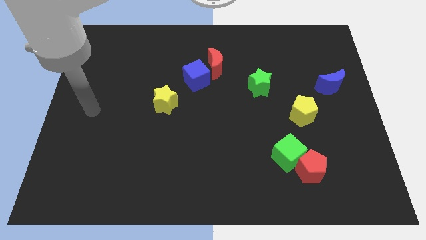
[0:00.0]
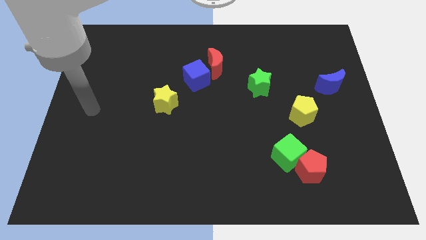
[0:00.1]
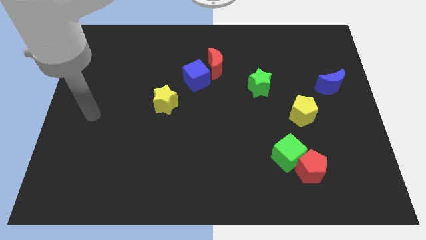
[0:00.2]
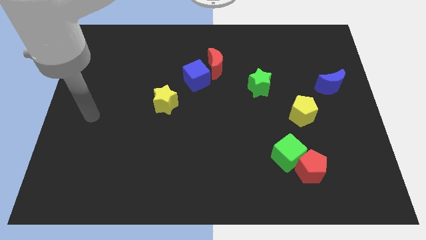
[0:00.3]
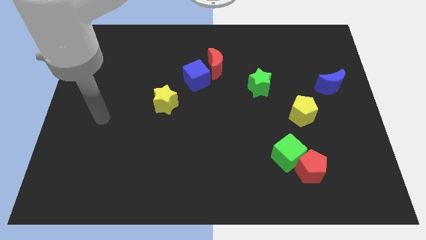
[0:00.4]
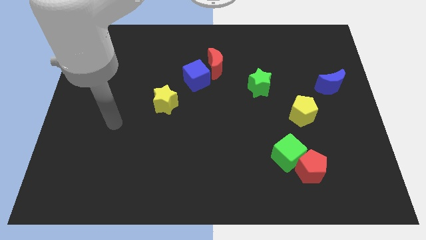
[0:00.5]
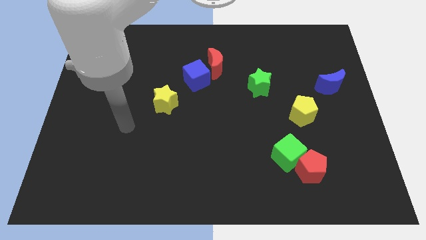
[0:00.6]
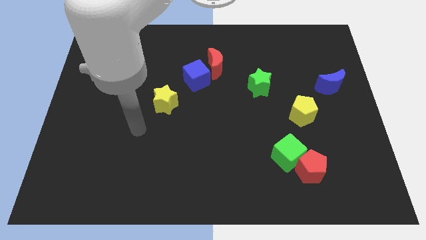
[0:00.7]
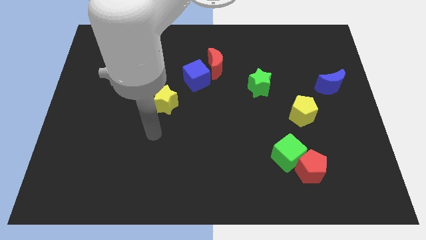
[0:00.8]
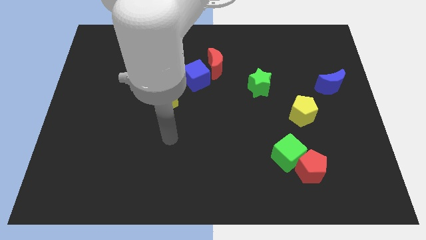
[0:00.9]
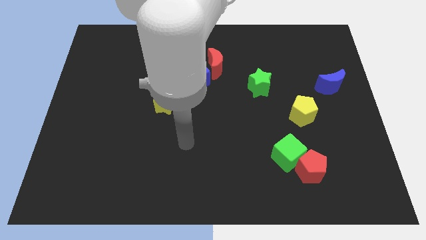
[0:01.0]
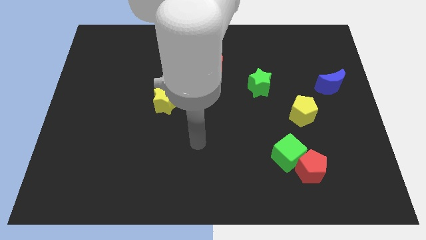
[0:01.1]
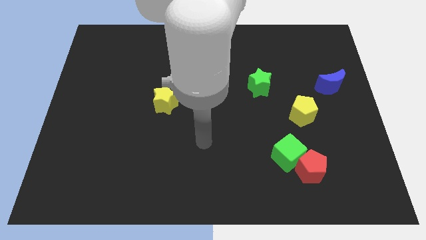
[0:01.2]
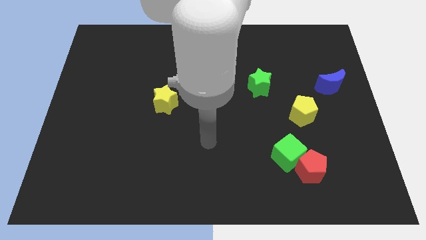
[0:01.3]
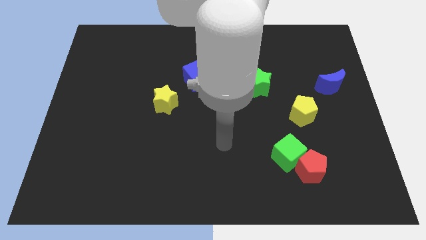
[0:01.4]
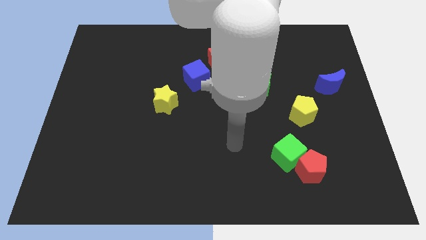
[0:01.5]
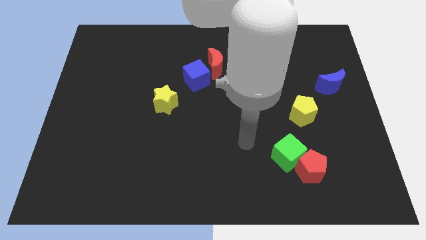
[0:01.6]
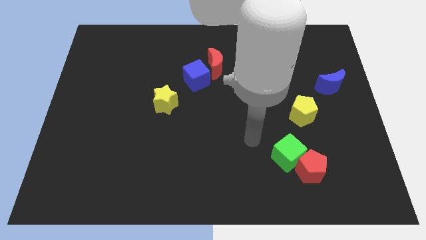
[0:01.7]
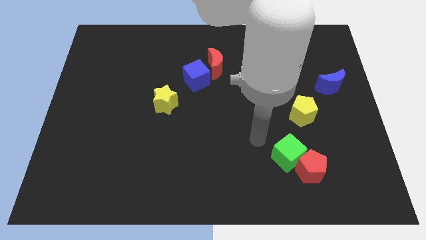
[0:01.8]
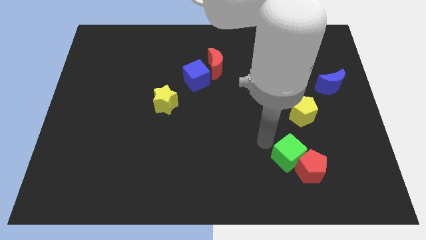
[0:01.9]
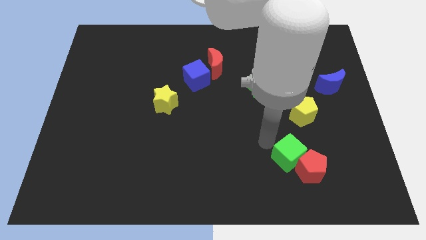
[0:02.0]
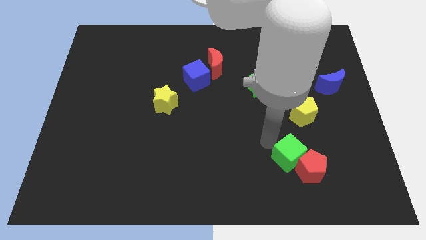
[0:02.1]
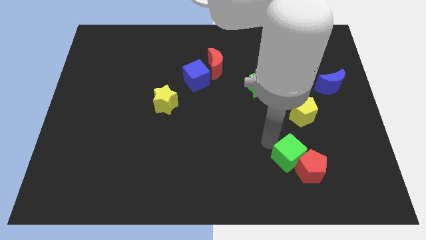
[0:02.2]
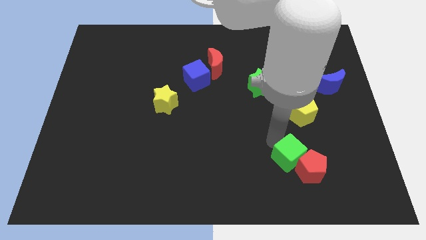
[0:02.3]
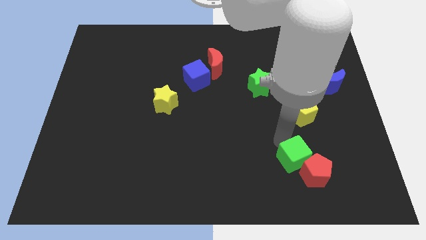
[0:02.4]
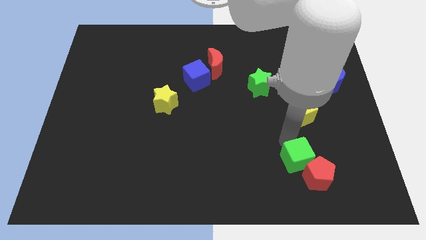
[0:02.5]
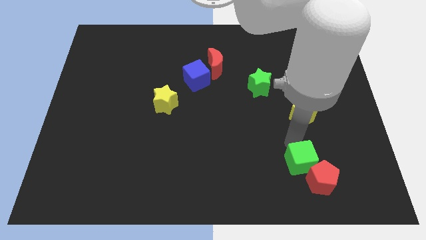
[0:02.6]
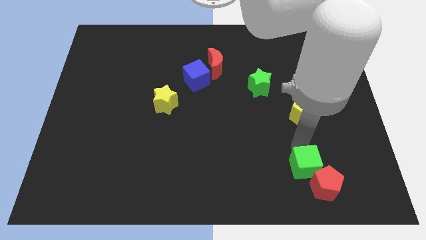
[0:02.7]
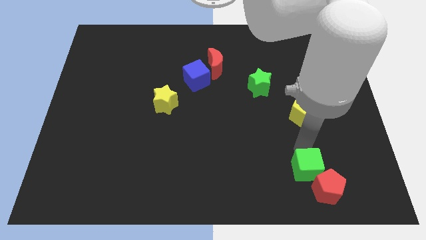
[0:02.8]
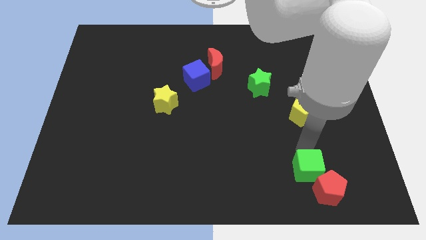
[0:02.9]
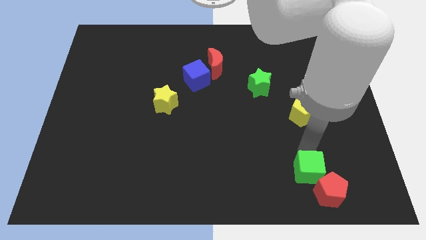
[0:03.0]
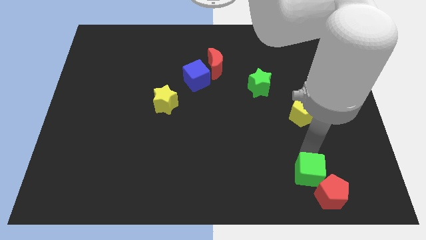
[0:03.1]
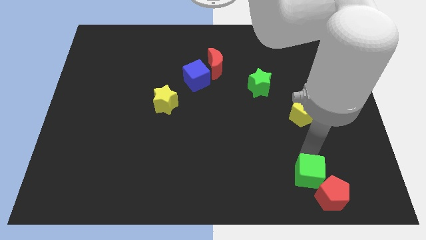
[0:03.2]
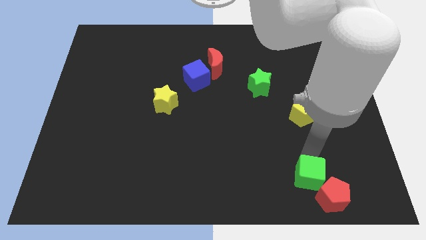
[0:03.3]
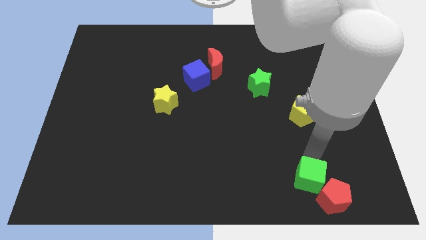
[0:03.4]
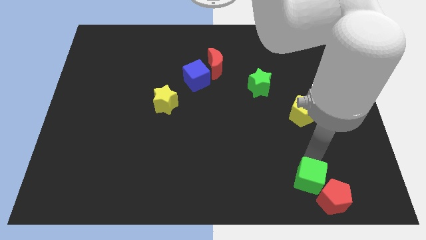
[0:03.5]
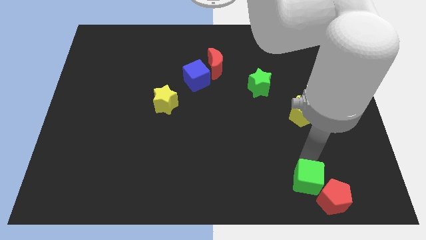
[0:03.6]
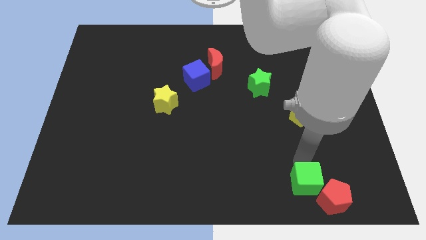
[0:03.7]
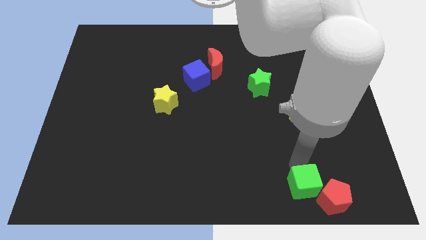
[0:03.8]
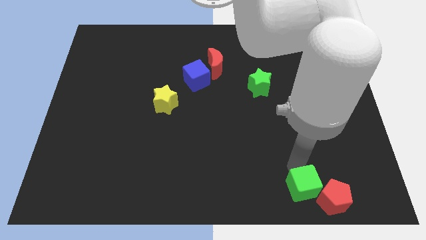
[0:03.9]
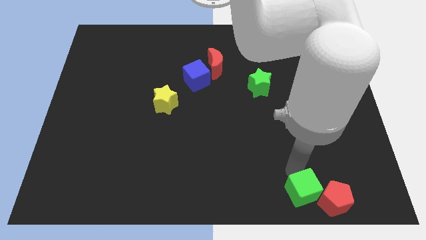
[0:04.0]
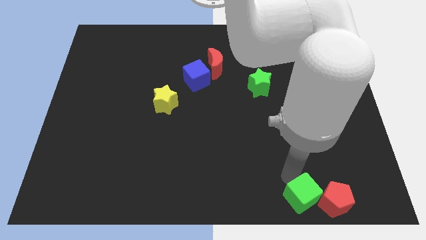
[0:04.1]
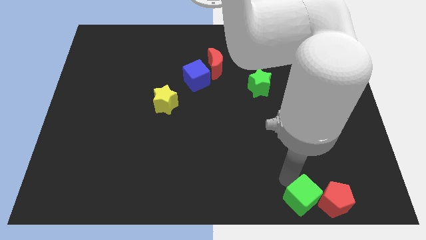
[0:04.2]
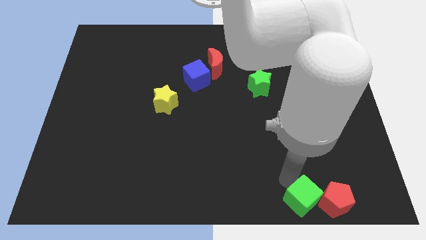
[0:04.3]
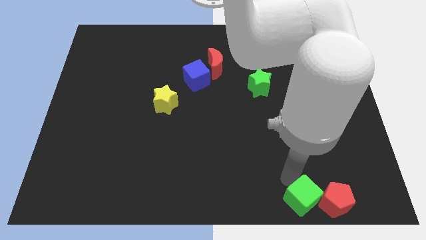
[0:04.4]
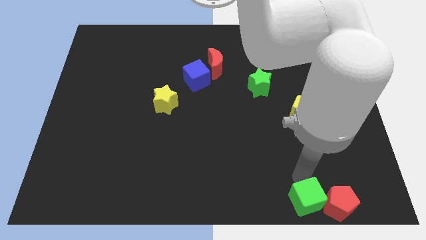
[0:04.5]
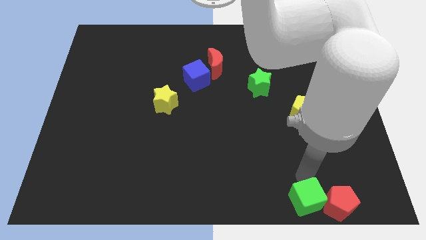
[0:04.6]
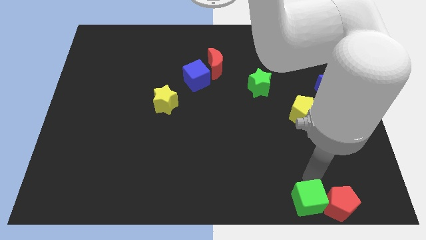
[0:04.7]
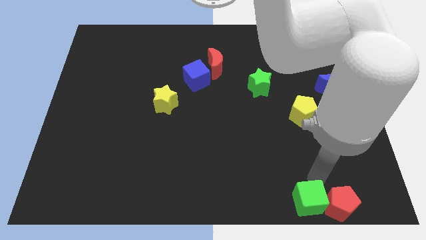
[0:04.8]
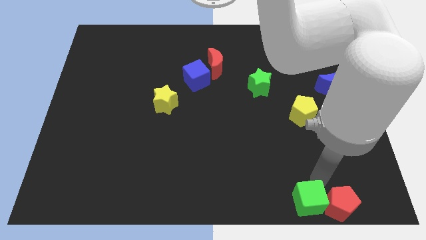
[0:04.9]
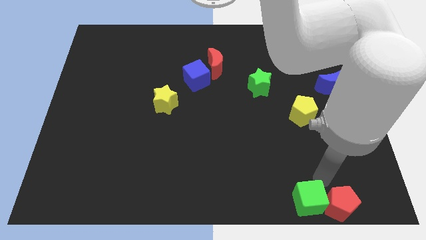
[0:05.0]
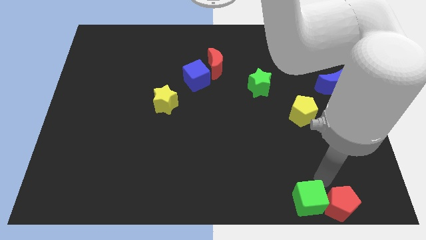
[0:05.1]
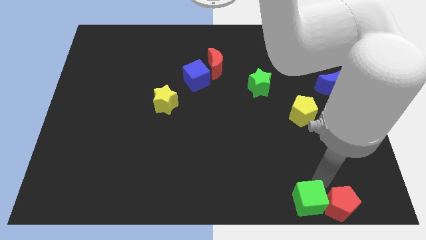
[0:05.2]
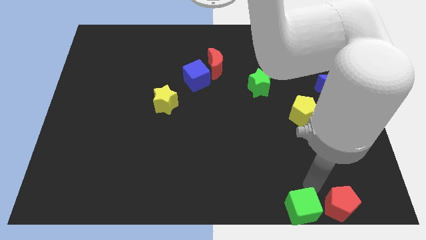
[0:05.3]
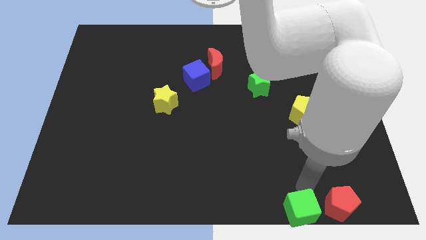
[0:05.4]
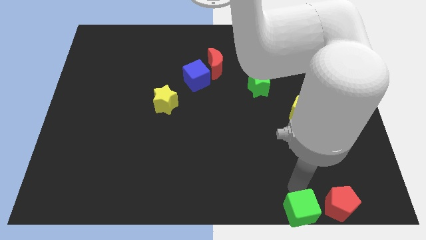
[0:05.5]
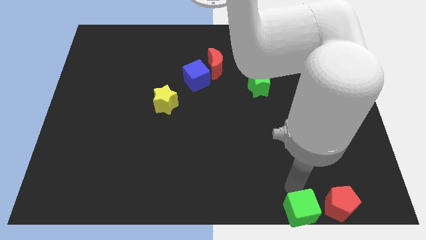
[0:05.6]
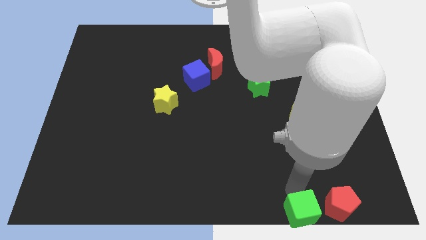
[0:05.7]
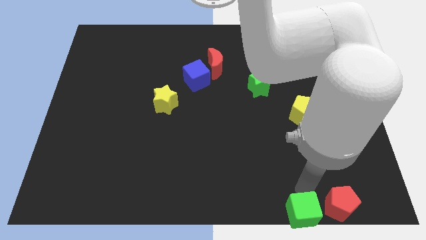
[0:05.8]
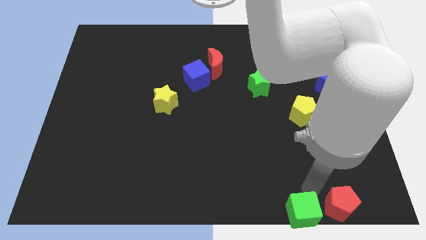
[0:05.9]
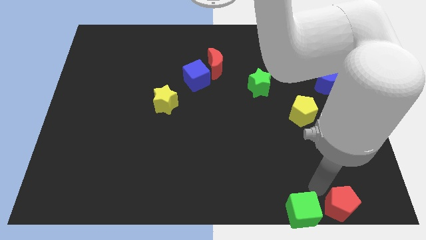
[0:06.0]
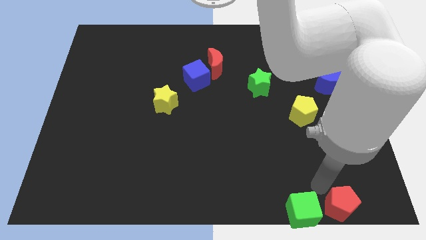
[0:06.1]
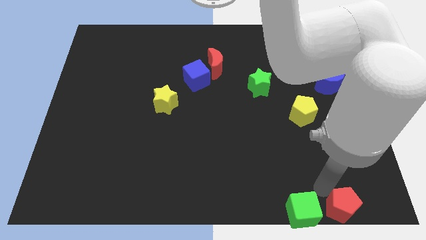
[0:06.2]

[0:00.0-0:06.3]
place the green cube left to the red pentagon

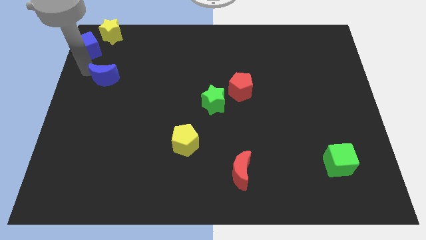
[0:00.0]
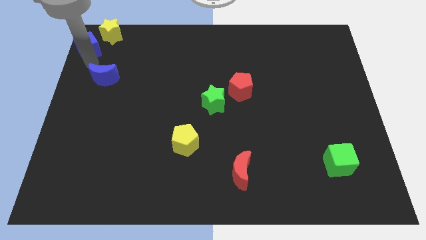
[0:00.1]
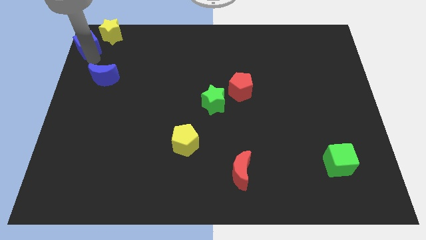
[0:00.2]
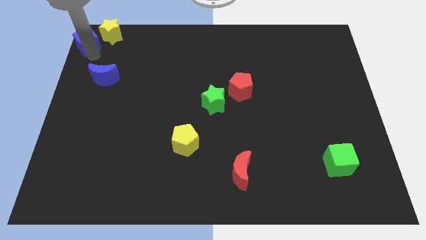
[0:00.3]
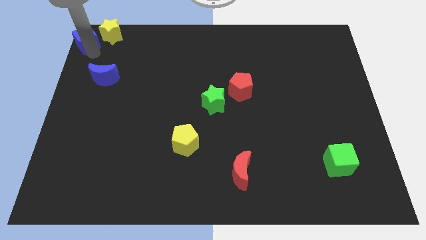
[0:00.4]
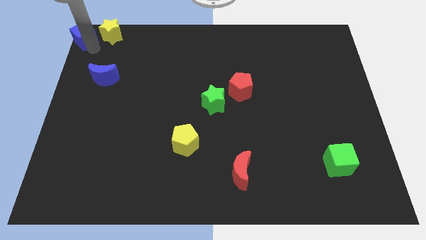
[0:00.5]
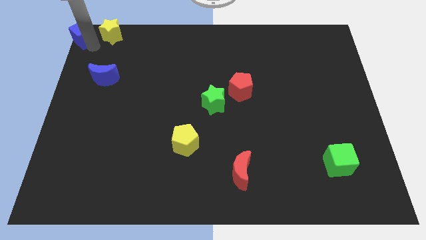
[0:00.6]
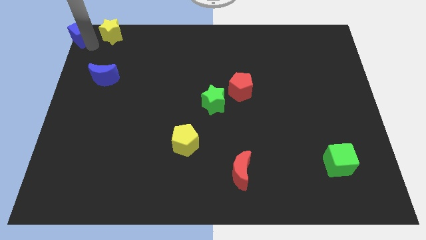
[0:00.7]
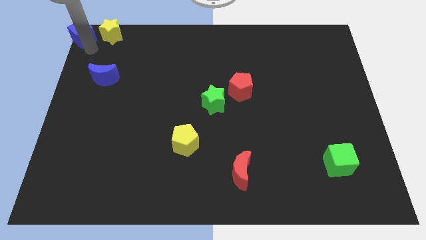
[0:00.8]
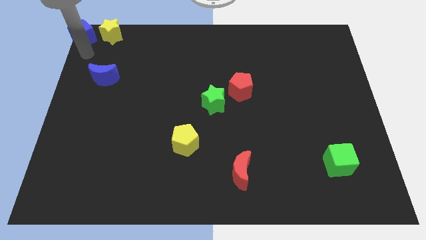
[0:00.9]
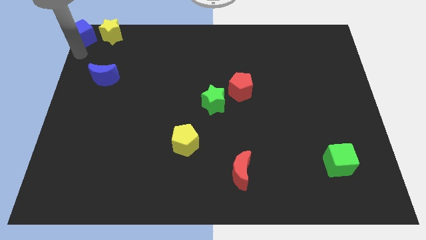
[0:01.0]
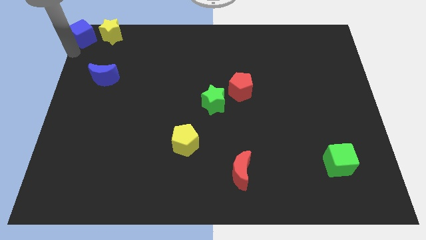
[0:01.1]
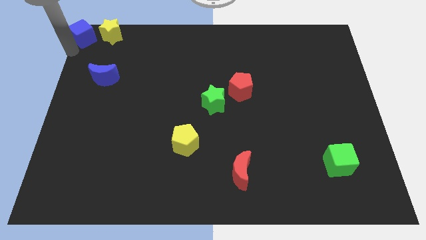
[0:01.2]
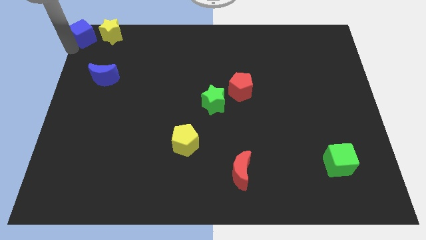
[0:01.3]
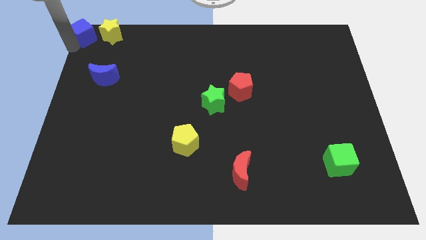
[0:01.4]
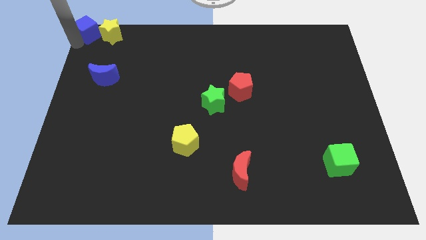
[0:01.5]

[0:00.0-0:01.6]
move the blue cube to the left side of the yellow star

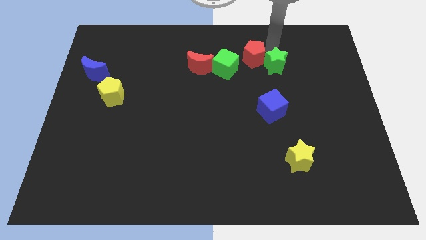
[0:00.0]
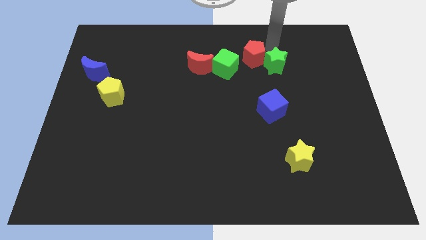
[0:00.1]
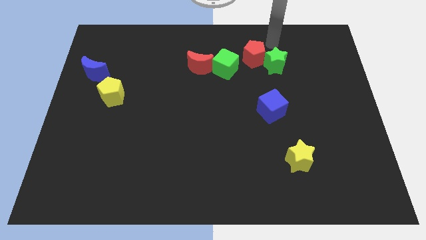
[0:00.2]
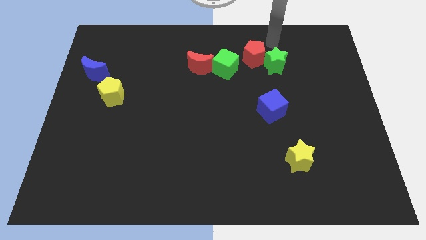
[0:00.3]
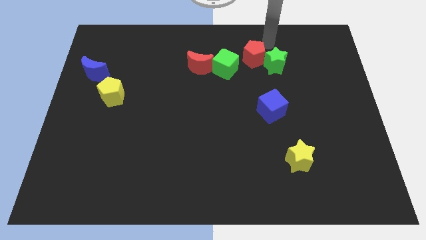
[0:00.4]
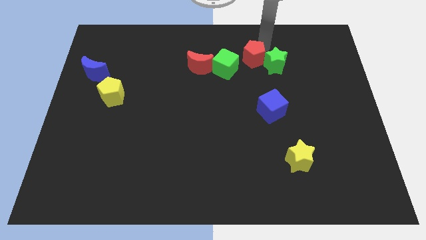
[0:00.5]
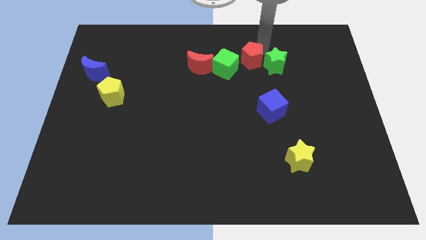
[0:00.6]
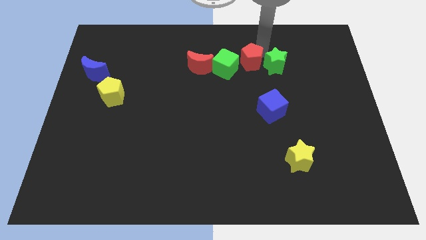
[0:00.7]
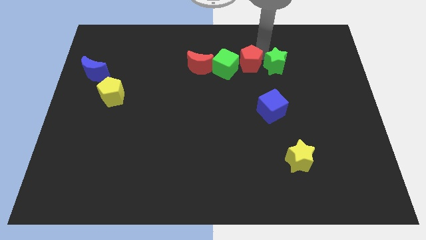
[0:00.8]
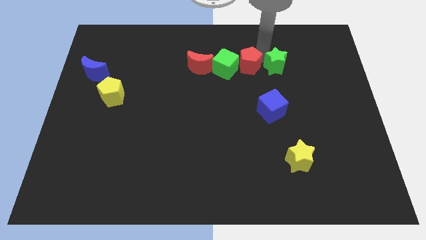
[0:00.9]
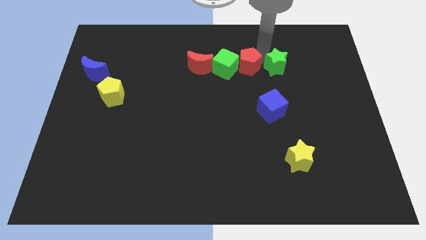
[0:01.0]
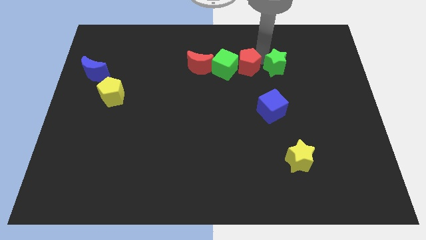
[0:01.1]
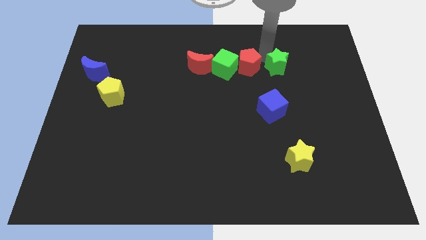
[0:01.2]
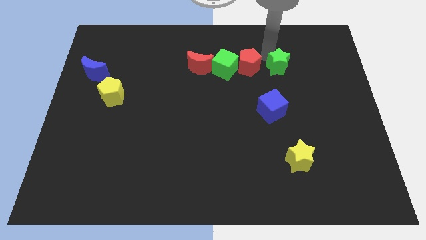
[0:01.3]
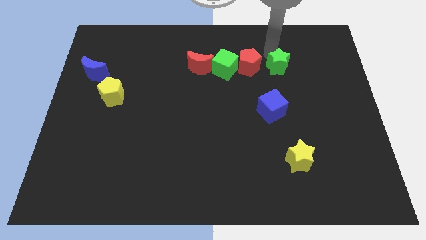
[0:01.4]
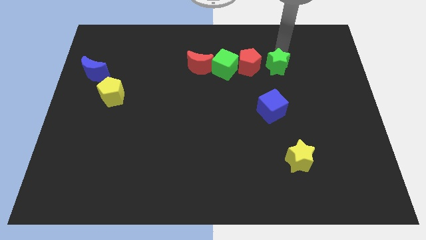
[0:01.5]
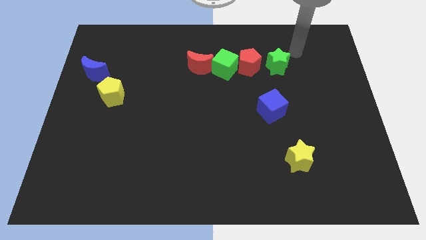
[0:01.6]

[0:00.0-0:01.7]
separate the red pentagon and the green star
